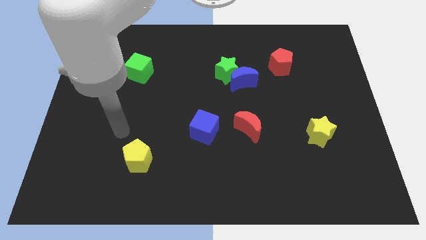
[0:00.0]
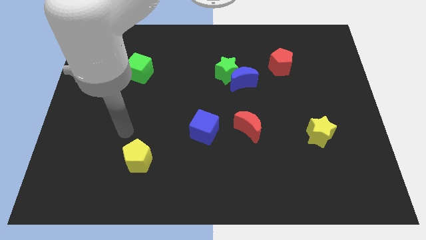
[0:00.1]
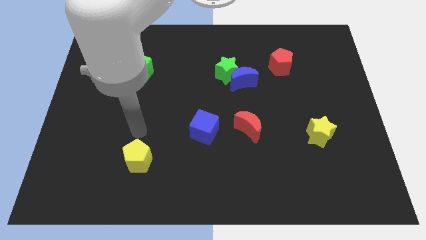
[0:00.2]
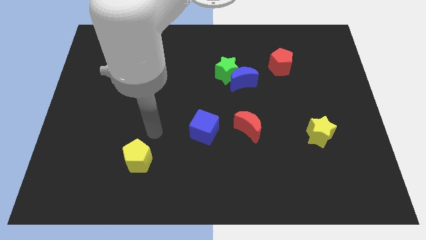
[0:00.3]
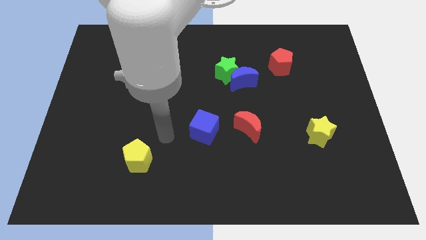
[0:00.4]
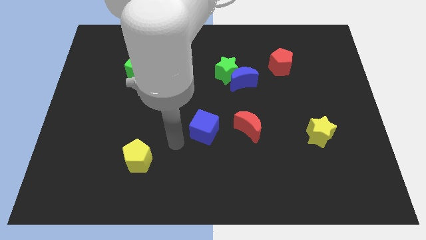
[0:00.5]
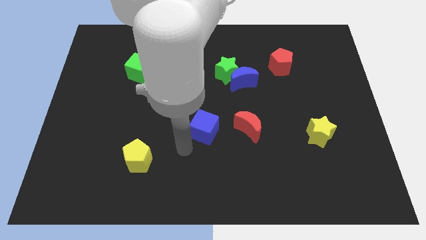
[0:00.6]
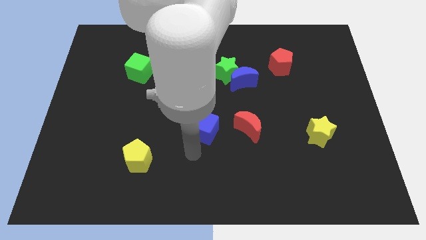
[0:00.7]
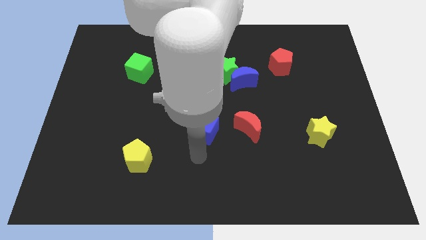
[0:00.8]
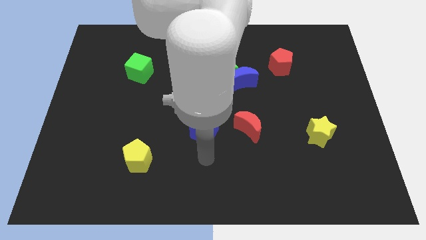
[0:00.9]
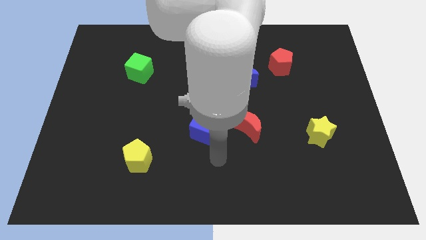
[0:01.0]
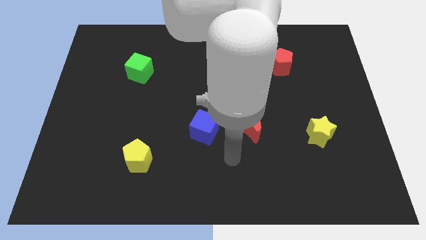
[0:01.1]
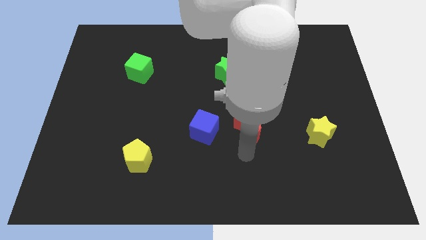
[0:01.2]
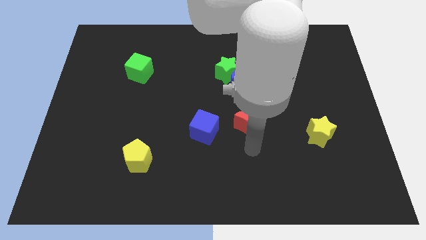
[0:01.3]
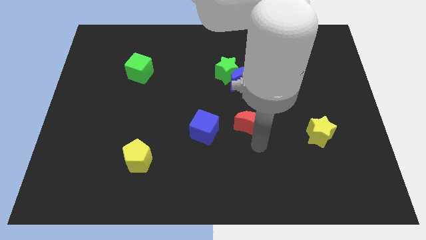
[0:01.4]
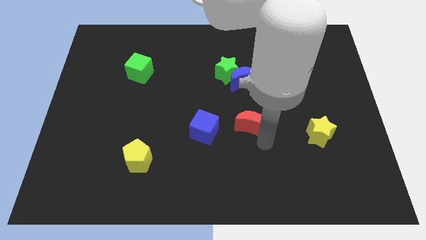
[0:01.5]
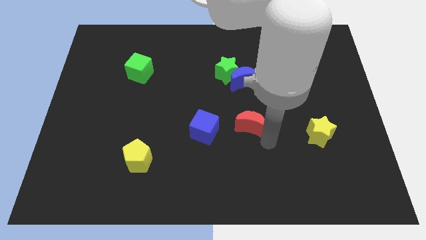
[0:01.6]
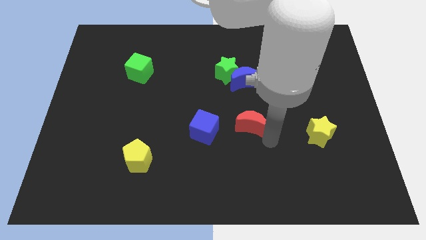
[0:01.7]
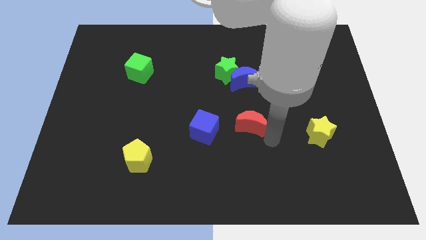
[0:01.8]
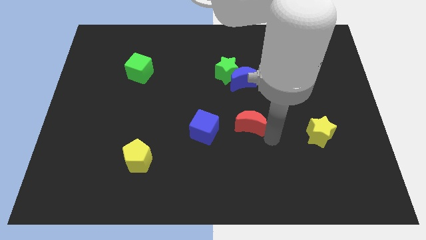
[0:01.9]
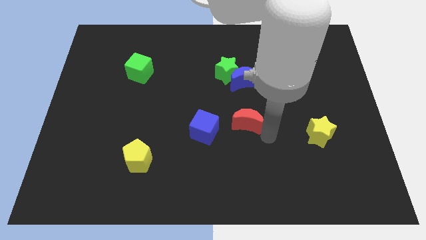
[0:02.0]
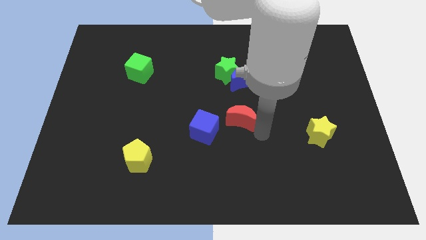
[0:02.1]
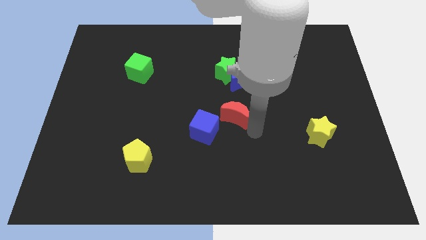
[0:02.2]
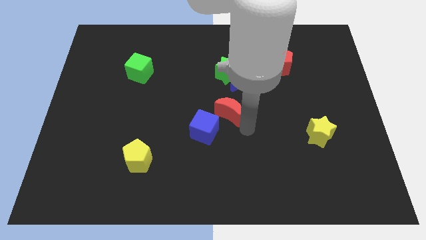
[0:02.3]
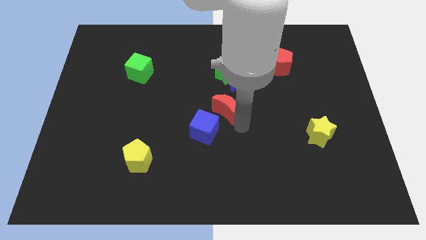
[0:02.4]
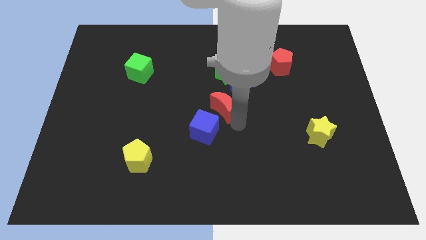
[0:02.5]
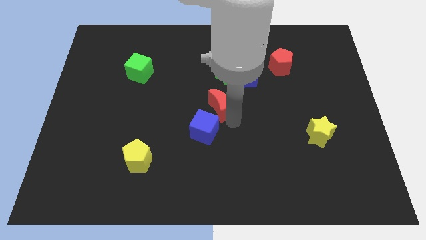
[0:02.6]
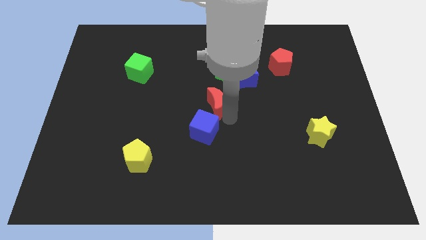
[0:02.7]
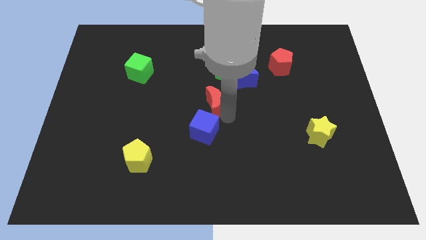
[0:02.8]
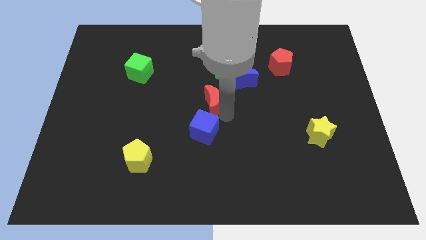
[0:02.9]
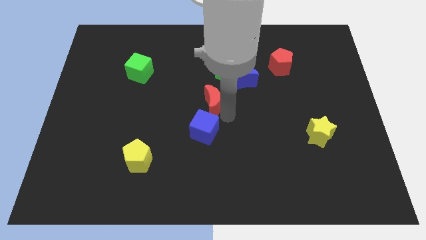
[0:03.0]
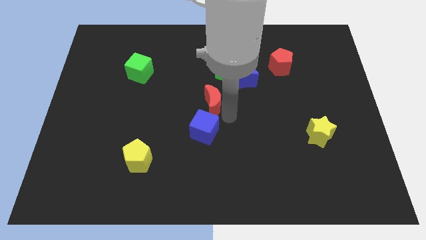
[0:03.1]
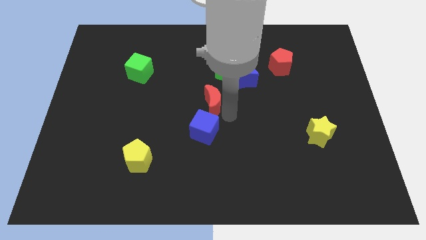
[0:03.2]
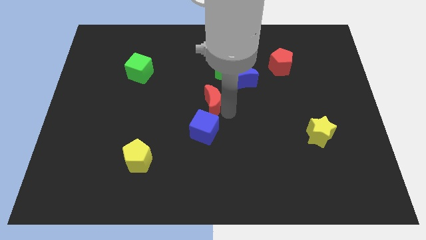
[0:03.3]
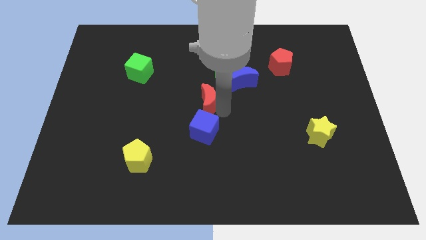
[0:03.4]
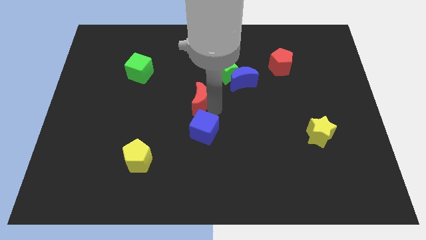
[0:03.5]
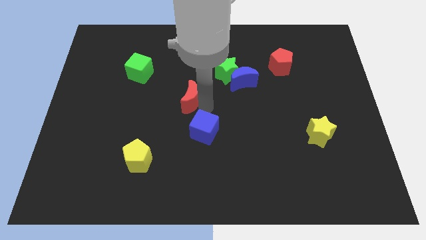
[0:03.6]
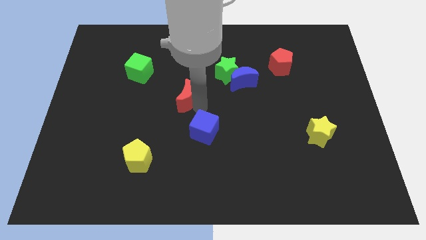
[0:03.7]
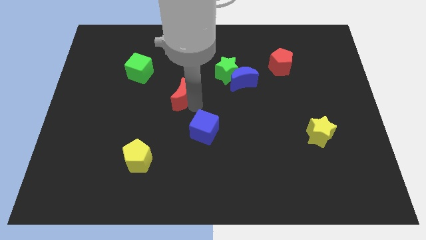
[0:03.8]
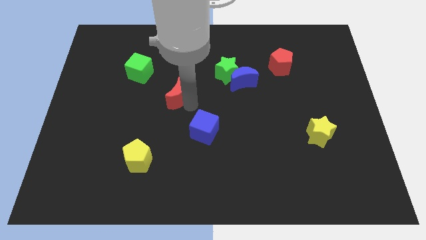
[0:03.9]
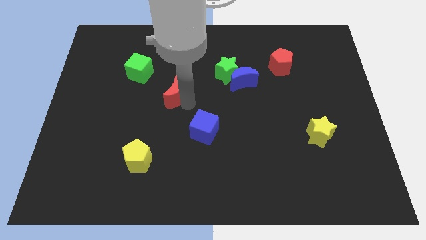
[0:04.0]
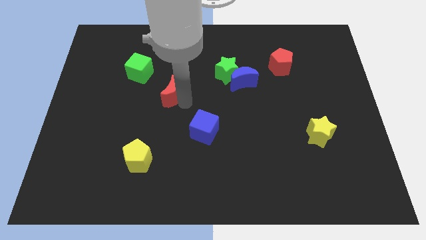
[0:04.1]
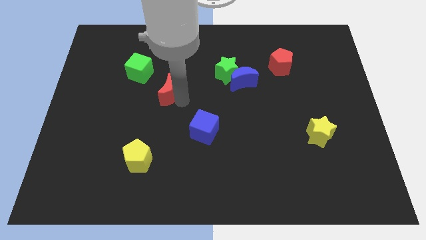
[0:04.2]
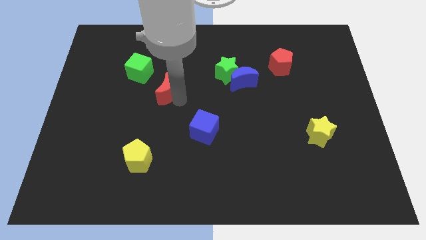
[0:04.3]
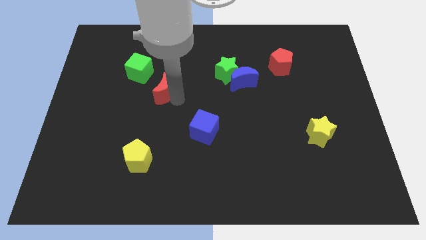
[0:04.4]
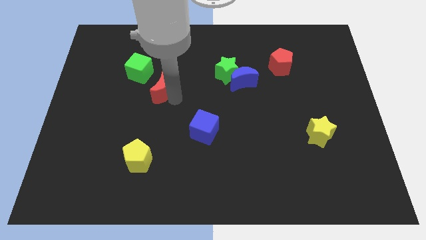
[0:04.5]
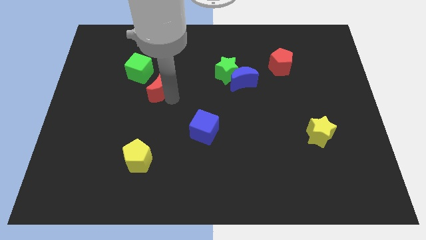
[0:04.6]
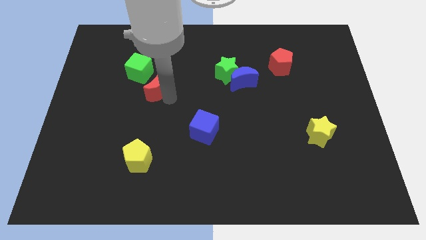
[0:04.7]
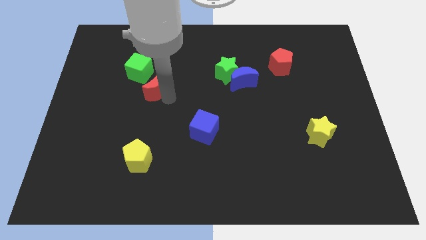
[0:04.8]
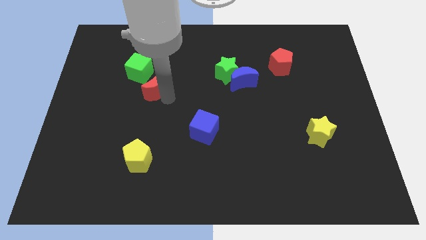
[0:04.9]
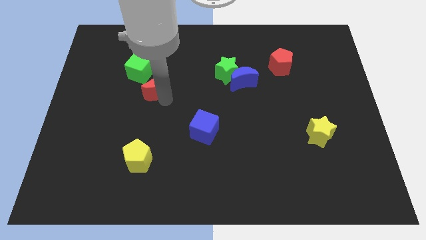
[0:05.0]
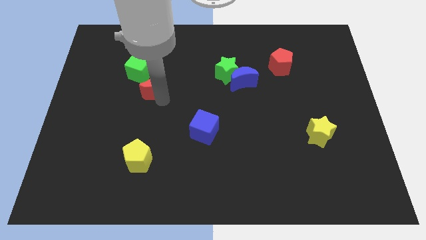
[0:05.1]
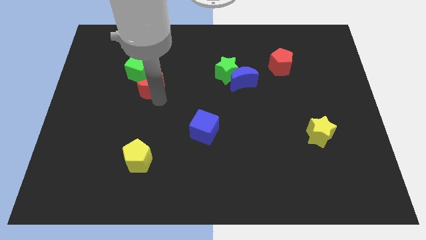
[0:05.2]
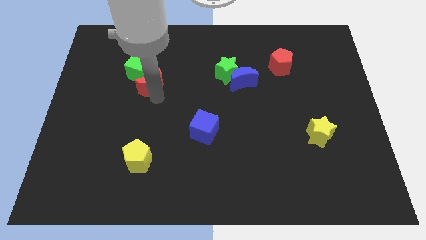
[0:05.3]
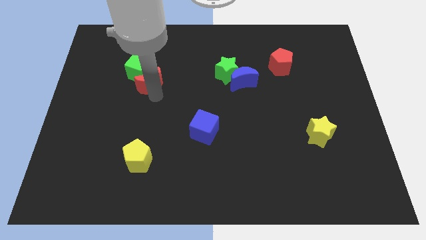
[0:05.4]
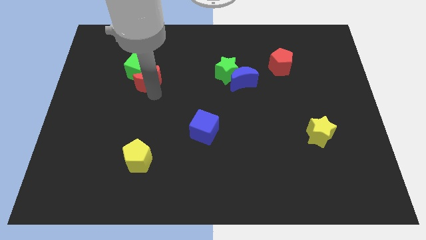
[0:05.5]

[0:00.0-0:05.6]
slide the red moon towards the green cube

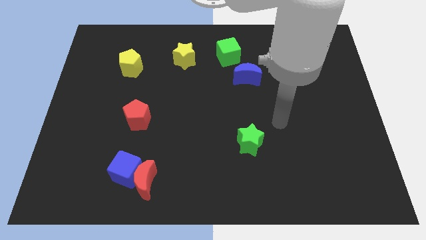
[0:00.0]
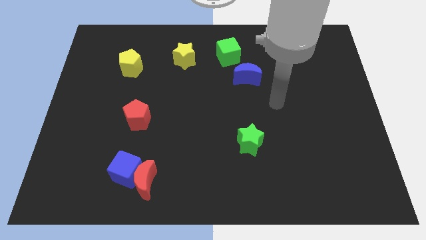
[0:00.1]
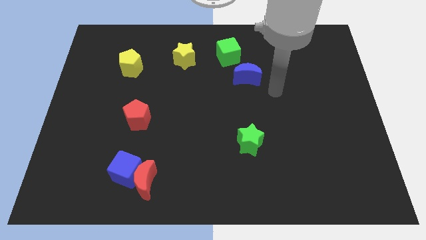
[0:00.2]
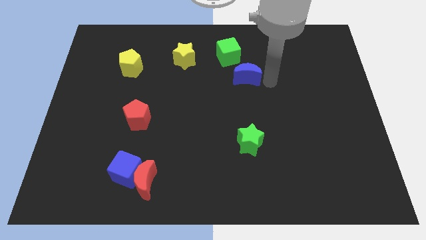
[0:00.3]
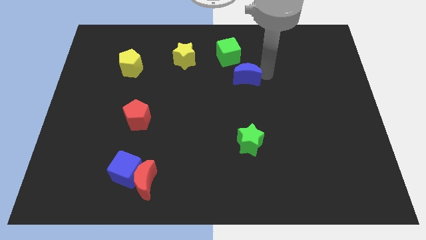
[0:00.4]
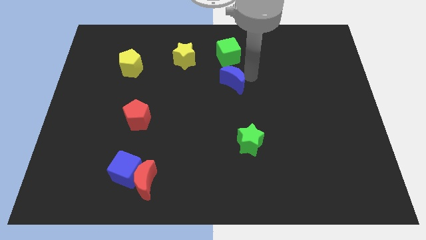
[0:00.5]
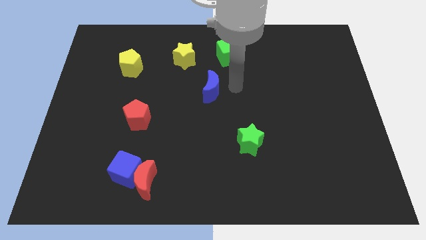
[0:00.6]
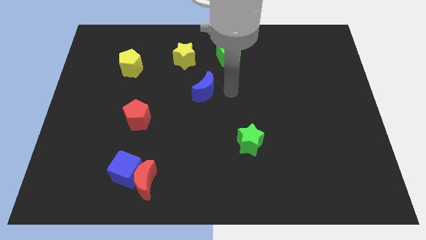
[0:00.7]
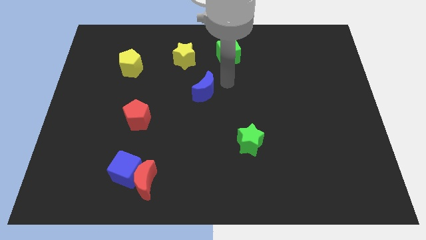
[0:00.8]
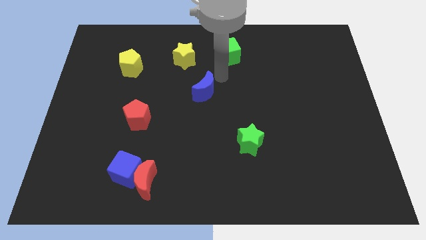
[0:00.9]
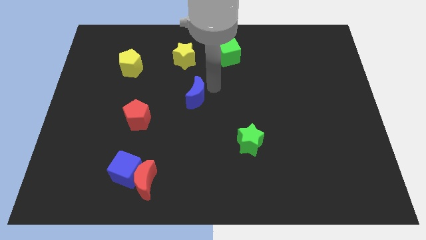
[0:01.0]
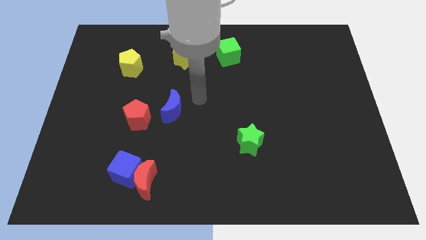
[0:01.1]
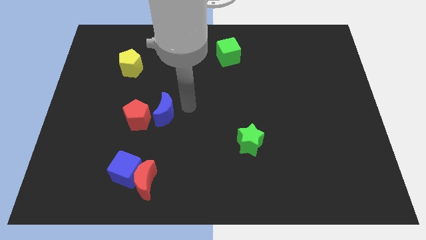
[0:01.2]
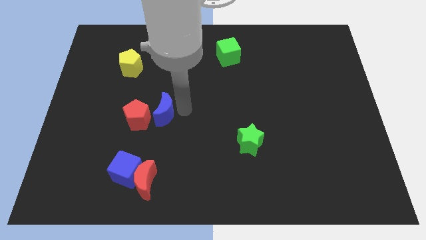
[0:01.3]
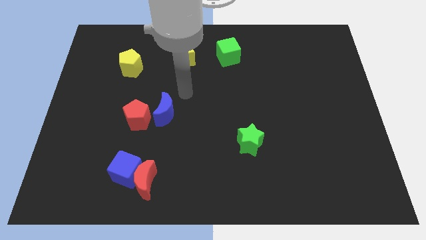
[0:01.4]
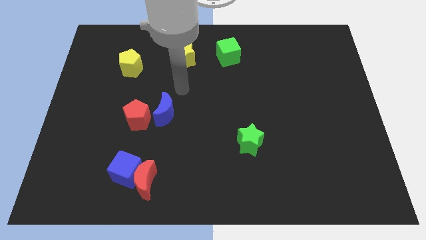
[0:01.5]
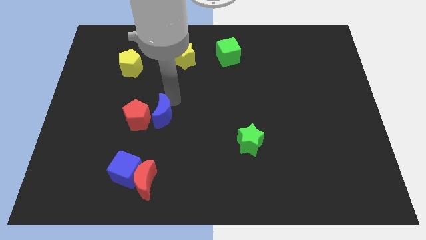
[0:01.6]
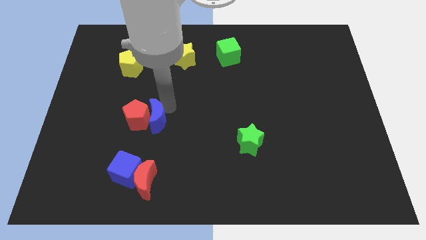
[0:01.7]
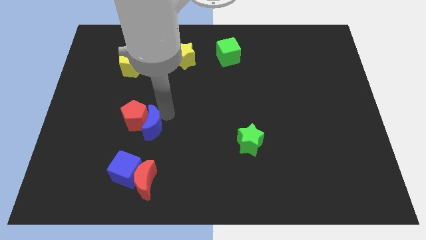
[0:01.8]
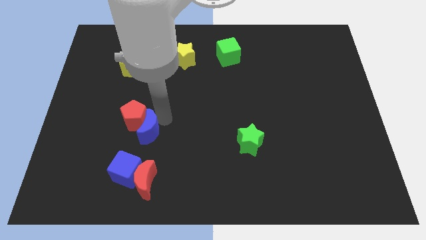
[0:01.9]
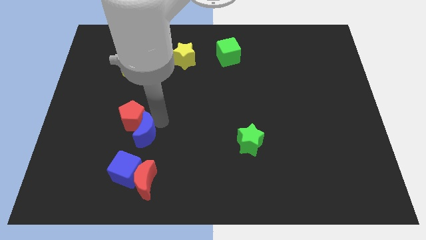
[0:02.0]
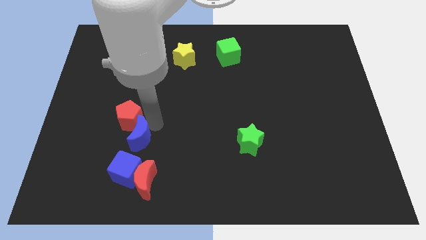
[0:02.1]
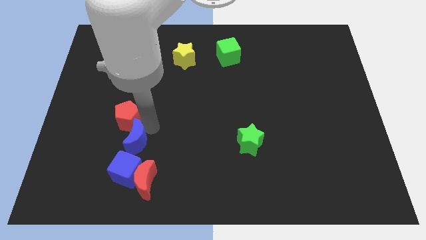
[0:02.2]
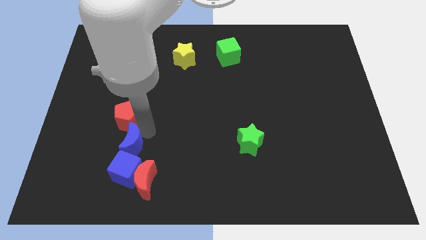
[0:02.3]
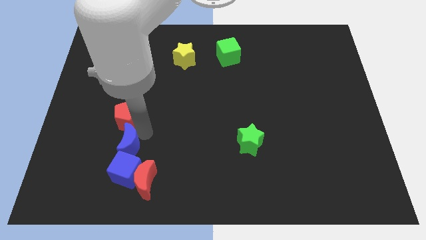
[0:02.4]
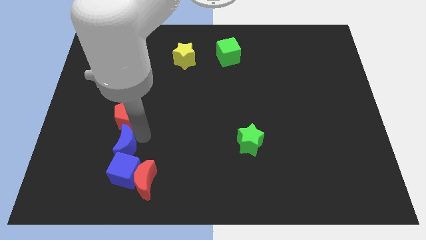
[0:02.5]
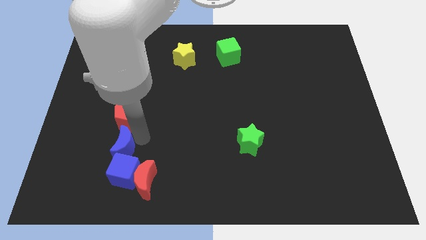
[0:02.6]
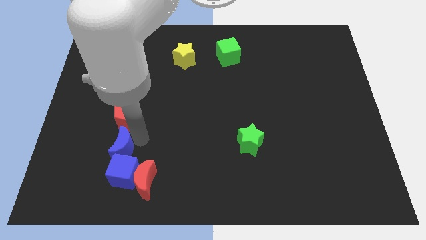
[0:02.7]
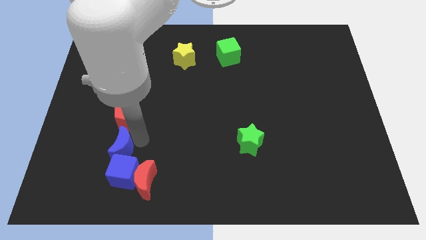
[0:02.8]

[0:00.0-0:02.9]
slide the blue moon next to the blue cube
